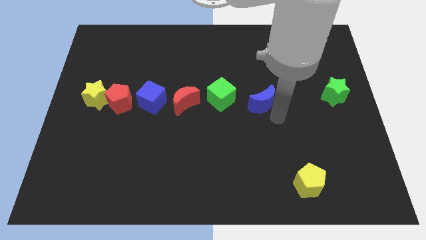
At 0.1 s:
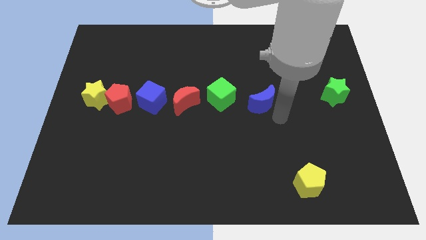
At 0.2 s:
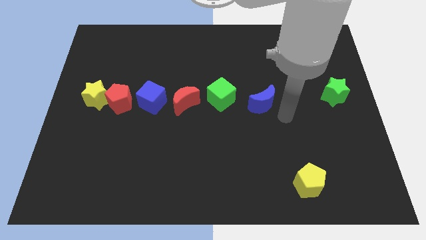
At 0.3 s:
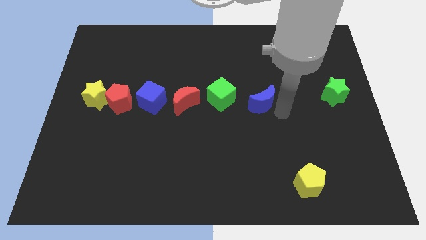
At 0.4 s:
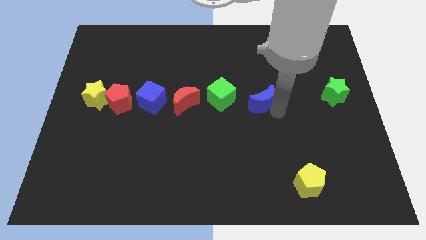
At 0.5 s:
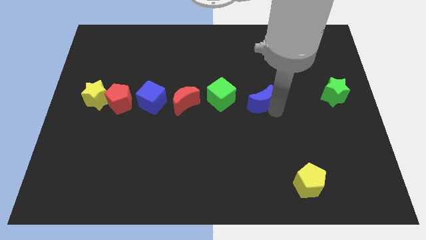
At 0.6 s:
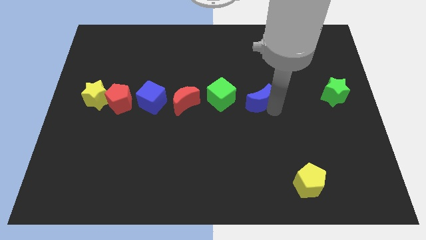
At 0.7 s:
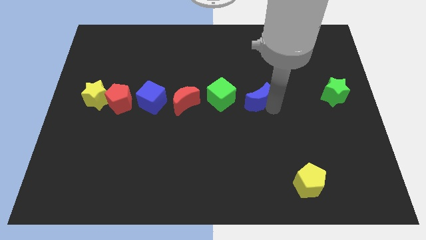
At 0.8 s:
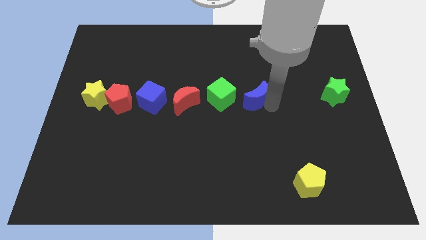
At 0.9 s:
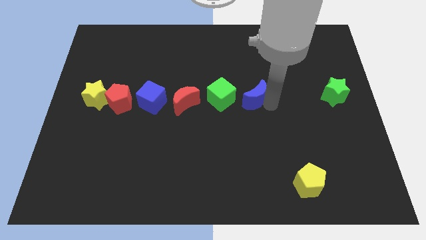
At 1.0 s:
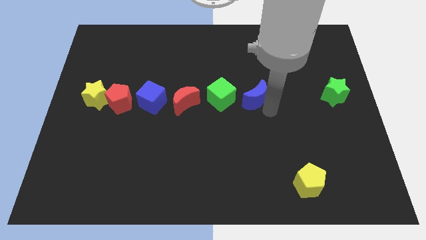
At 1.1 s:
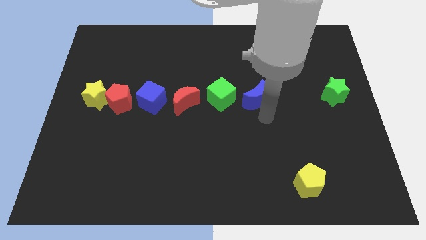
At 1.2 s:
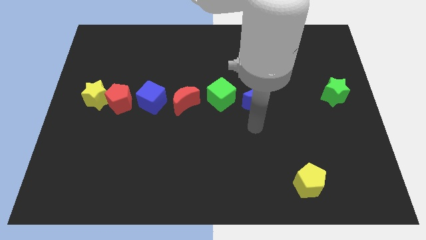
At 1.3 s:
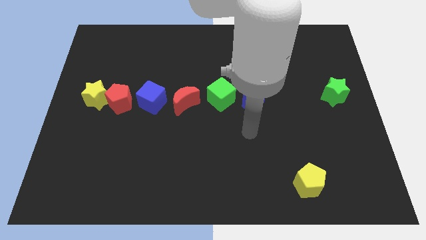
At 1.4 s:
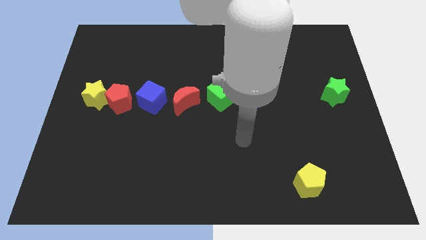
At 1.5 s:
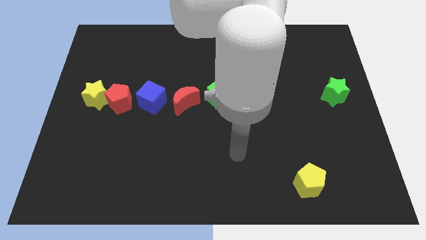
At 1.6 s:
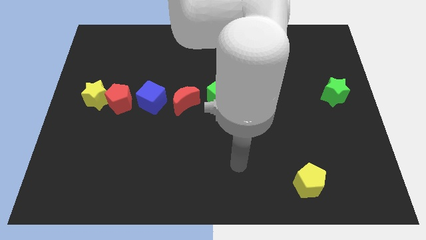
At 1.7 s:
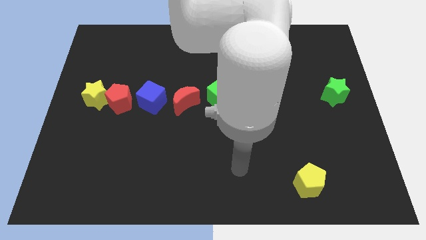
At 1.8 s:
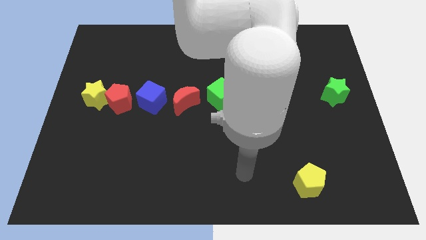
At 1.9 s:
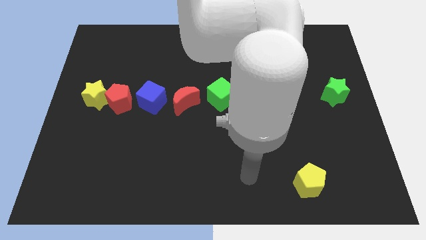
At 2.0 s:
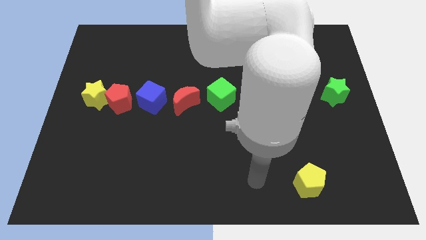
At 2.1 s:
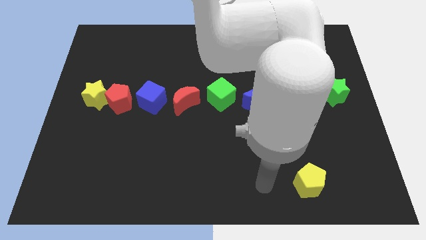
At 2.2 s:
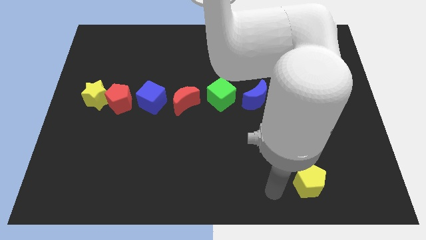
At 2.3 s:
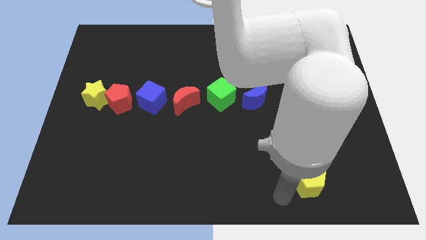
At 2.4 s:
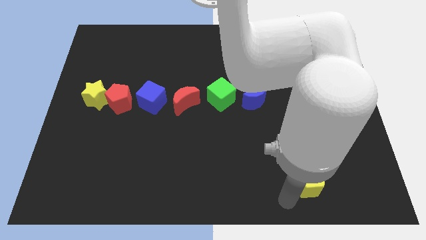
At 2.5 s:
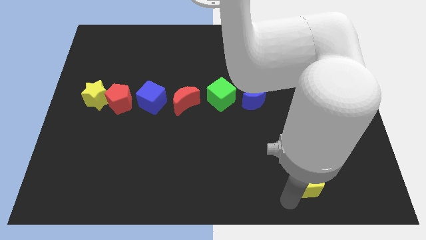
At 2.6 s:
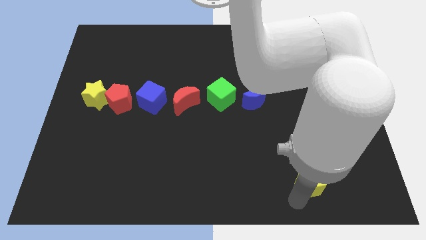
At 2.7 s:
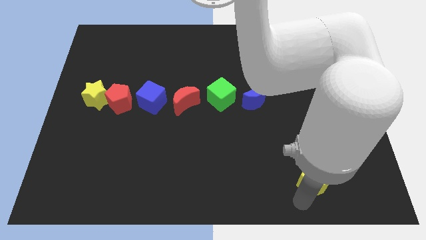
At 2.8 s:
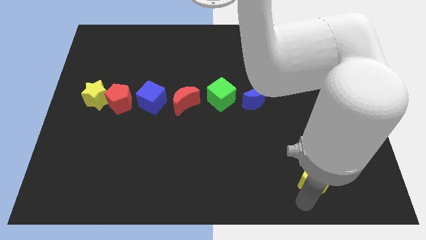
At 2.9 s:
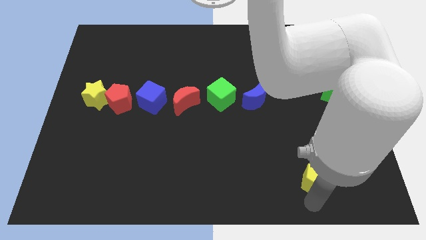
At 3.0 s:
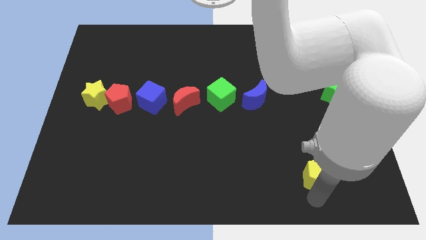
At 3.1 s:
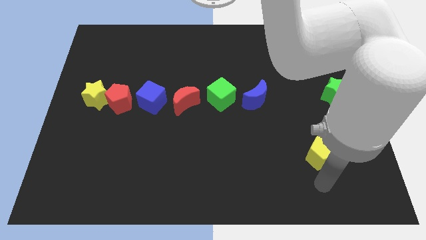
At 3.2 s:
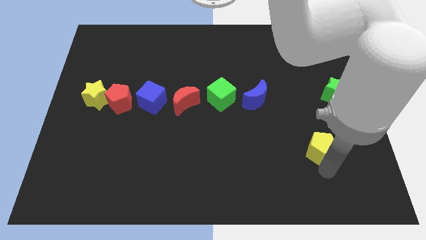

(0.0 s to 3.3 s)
move the yellow pentagon slightly upwards

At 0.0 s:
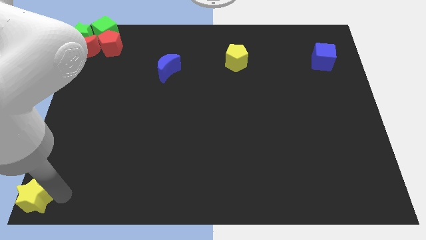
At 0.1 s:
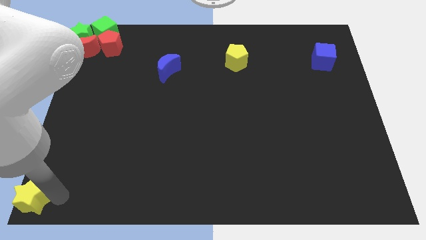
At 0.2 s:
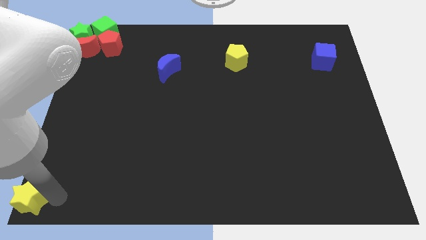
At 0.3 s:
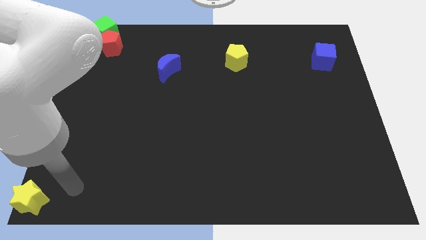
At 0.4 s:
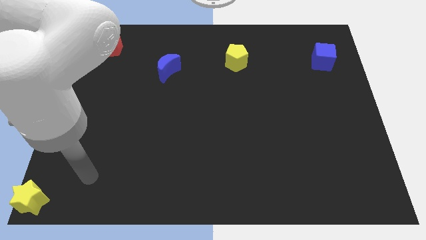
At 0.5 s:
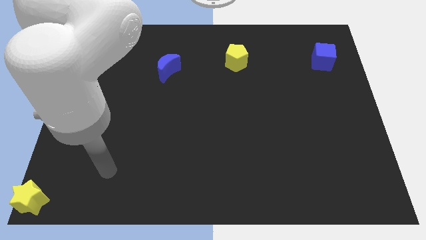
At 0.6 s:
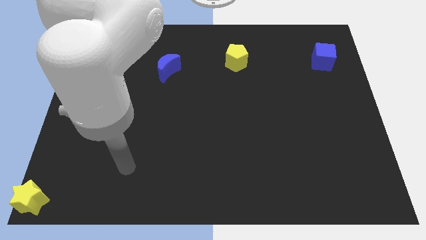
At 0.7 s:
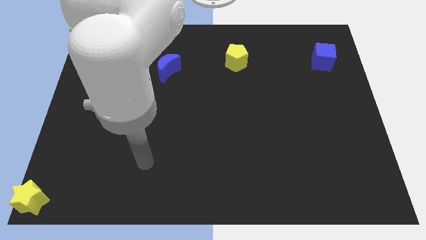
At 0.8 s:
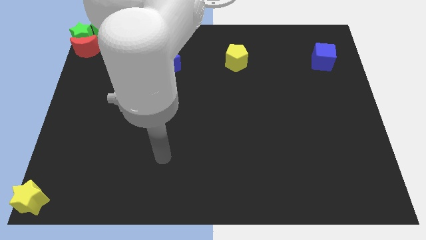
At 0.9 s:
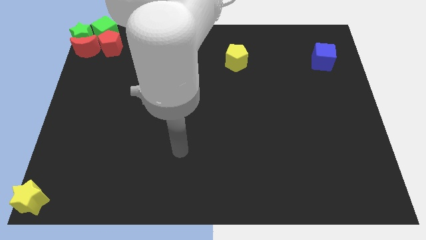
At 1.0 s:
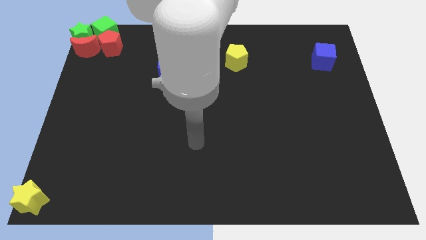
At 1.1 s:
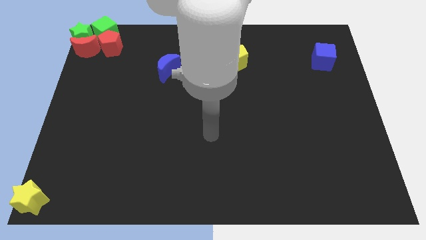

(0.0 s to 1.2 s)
move the arm away from the yellow star

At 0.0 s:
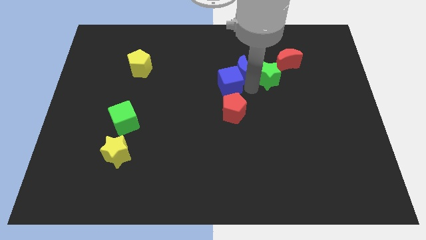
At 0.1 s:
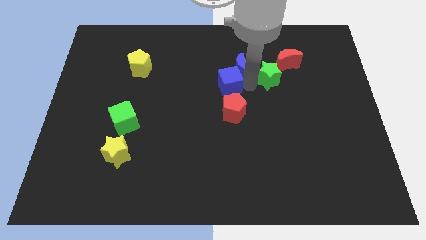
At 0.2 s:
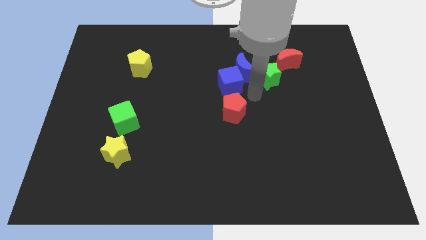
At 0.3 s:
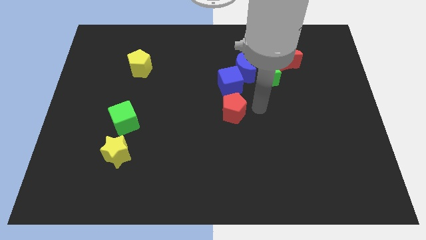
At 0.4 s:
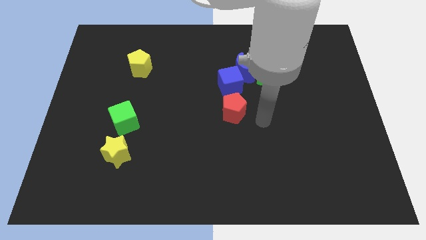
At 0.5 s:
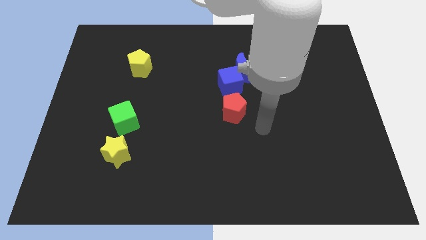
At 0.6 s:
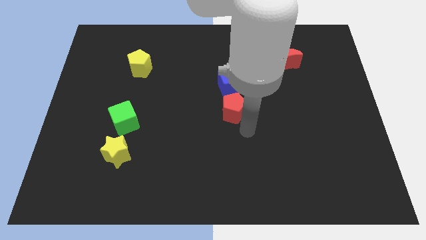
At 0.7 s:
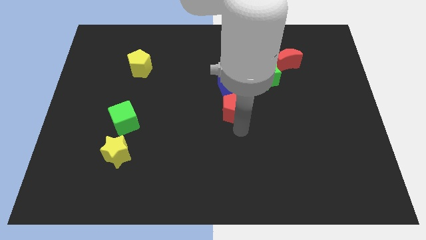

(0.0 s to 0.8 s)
move your arm to the bottom side of the red pentagon

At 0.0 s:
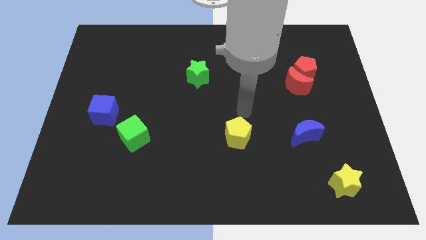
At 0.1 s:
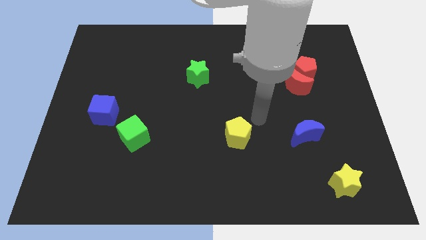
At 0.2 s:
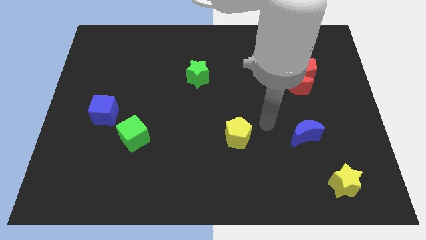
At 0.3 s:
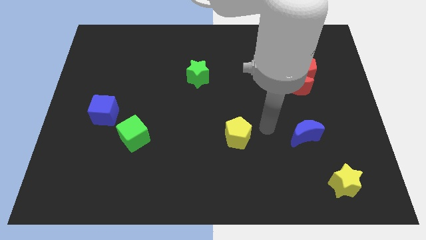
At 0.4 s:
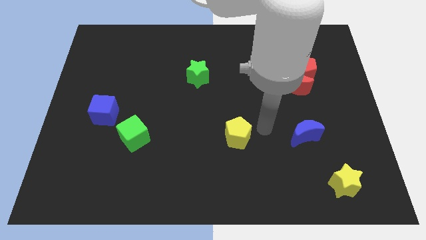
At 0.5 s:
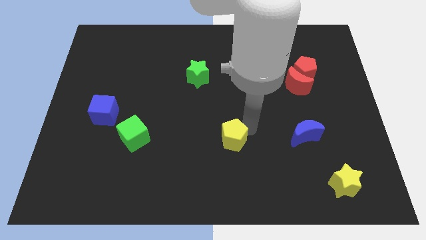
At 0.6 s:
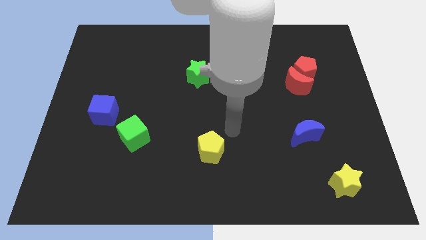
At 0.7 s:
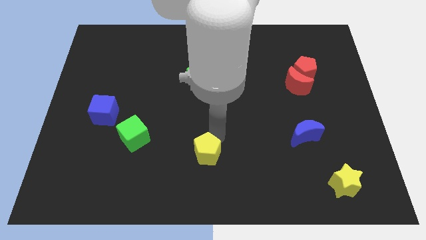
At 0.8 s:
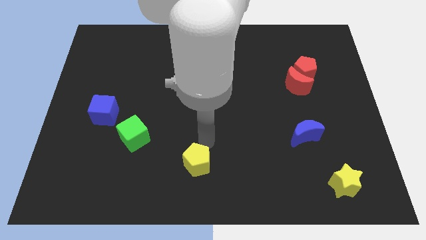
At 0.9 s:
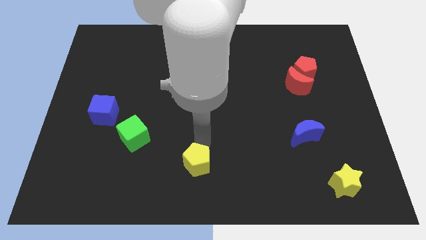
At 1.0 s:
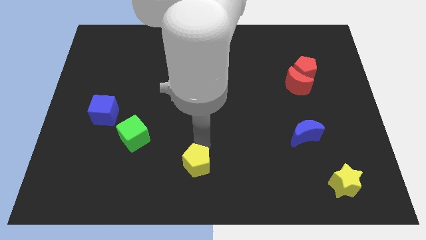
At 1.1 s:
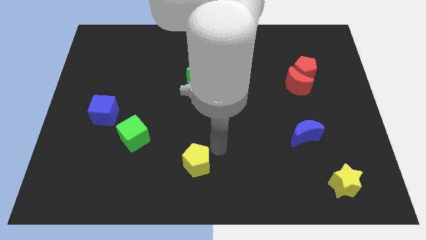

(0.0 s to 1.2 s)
place yellow pentagon to the bottom of green star

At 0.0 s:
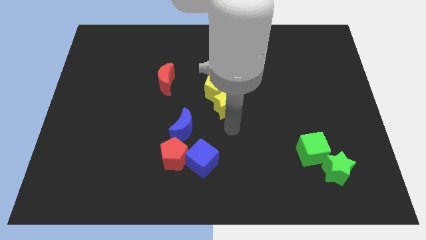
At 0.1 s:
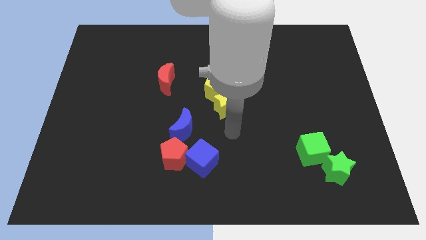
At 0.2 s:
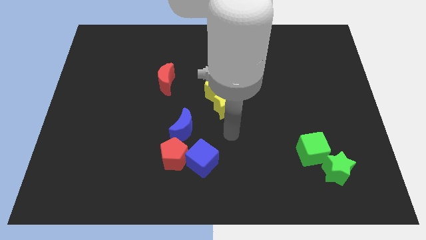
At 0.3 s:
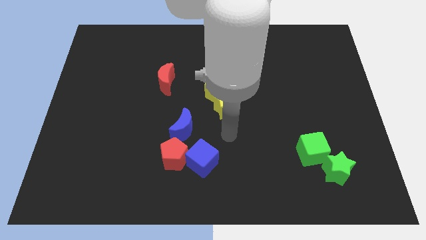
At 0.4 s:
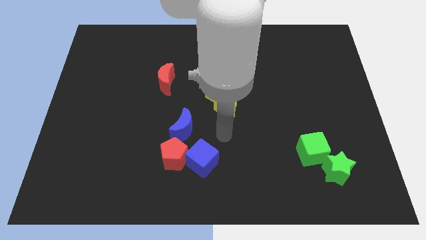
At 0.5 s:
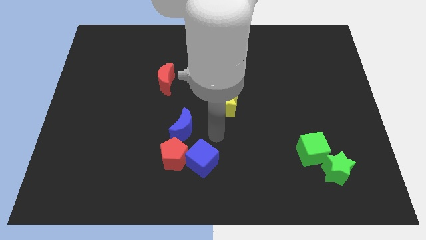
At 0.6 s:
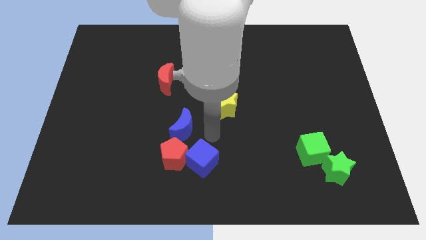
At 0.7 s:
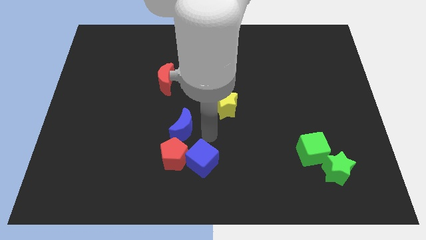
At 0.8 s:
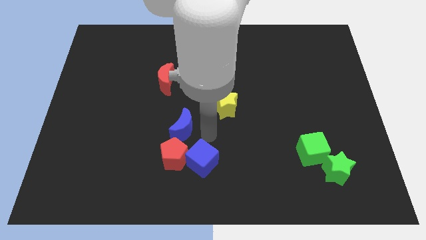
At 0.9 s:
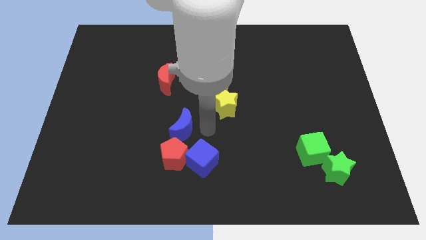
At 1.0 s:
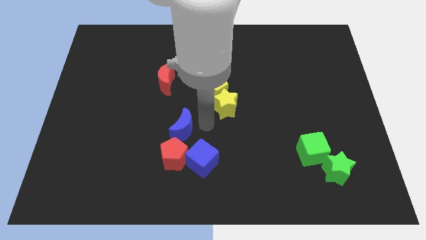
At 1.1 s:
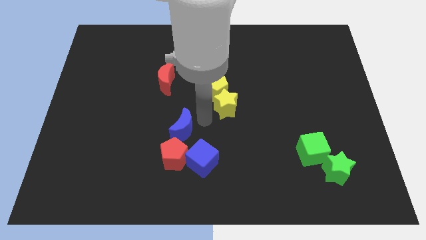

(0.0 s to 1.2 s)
point your arm at the top of the blue crescent

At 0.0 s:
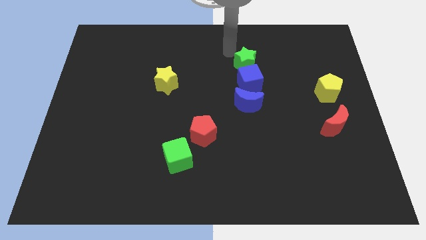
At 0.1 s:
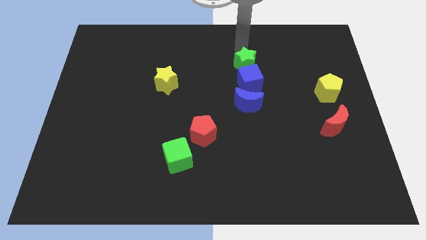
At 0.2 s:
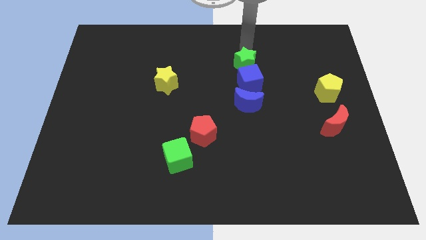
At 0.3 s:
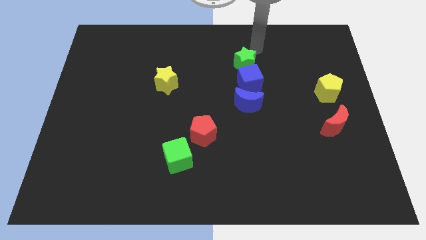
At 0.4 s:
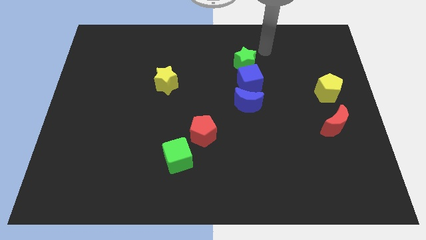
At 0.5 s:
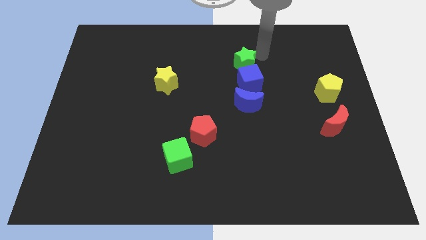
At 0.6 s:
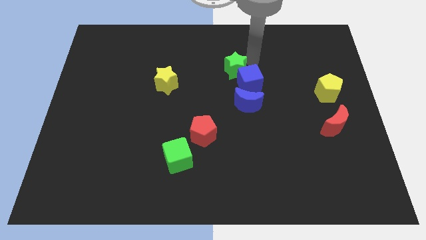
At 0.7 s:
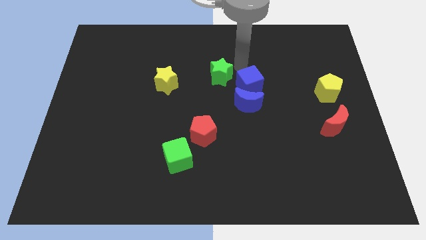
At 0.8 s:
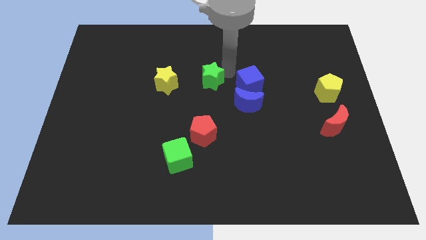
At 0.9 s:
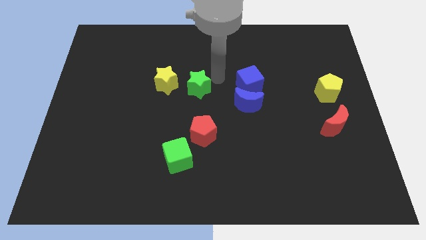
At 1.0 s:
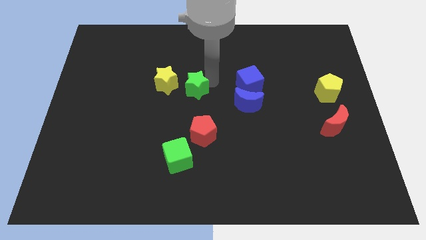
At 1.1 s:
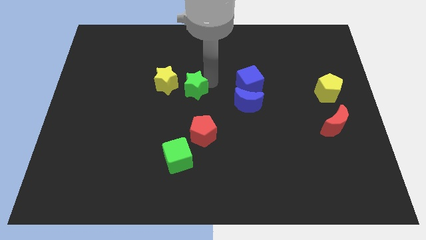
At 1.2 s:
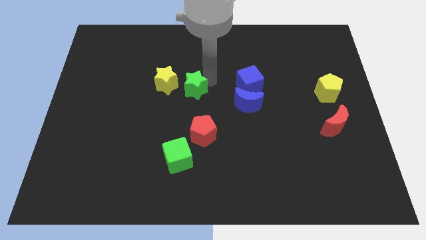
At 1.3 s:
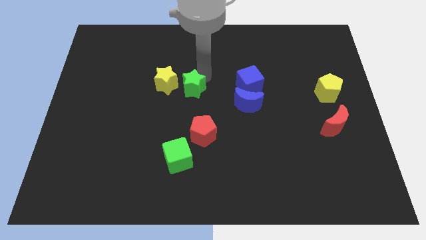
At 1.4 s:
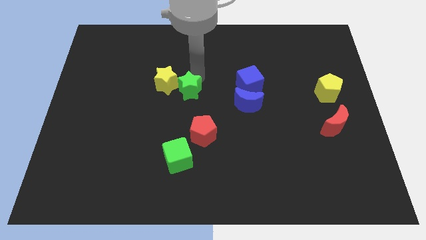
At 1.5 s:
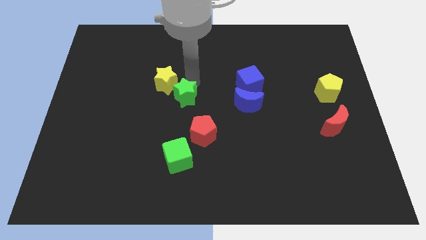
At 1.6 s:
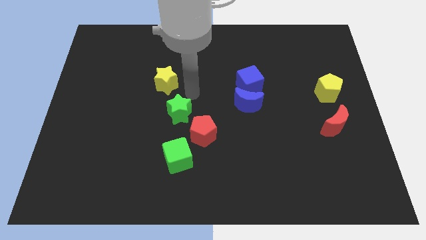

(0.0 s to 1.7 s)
place the green star in between the yellow block and the red pentagon
